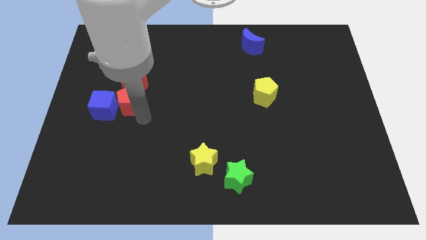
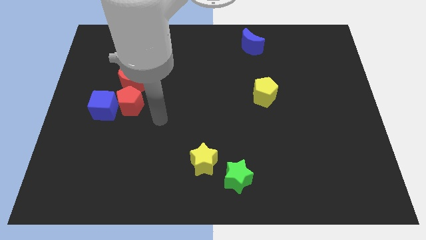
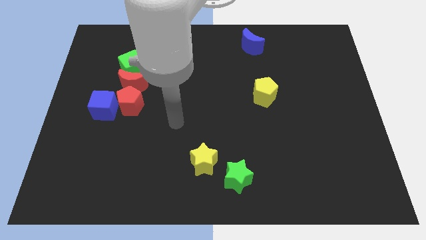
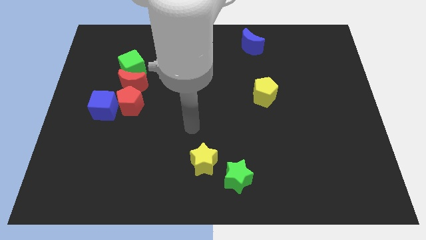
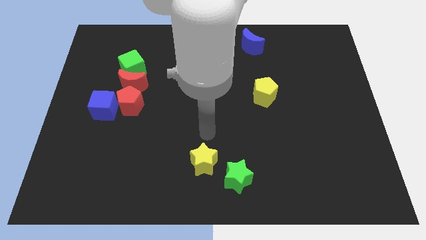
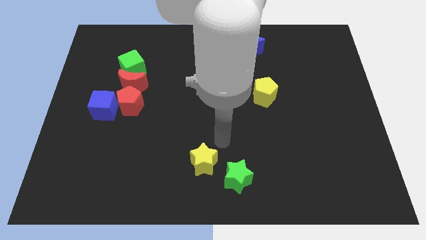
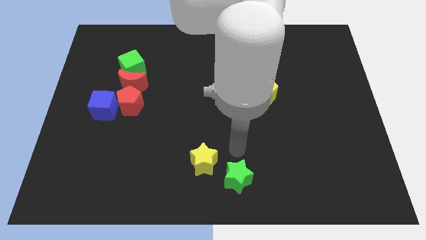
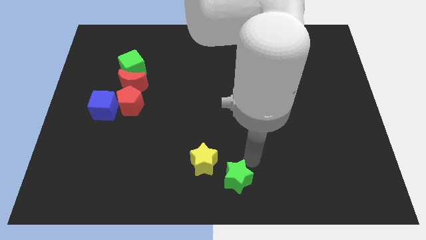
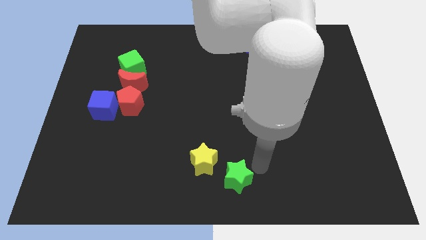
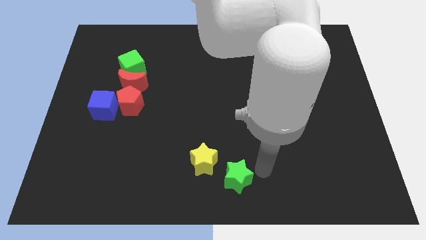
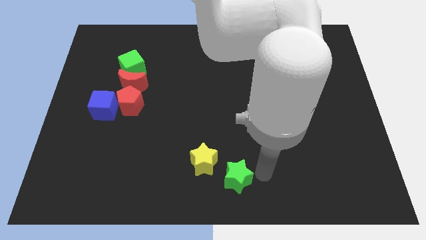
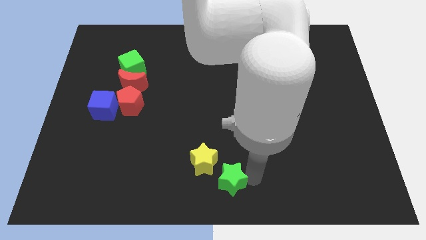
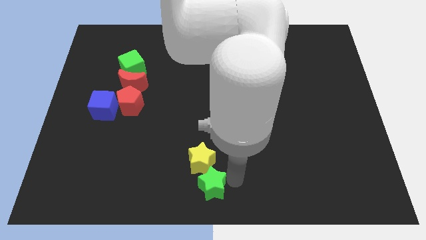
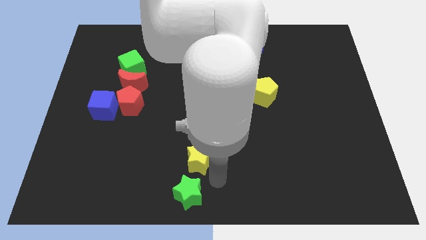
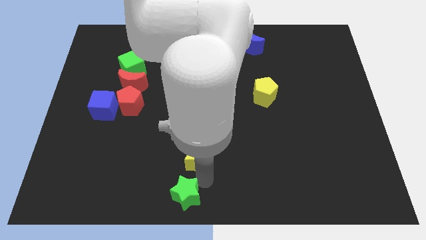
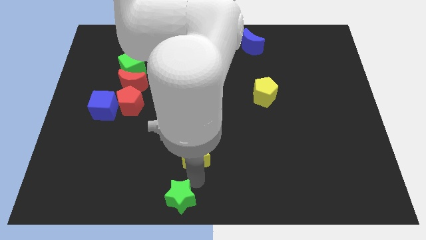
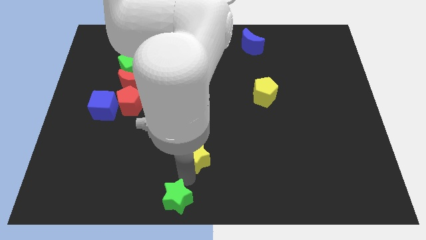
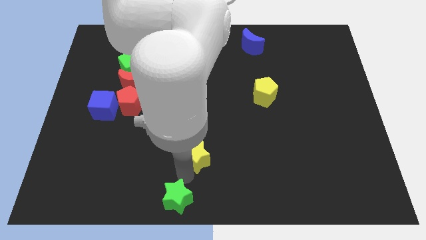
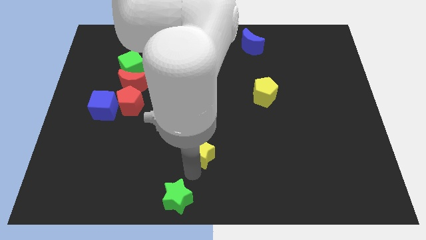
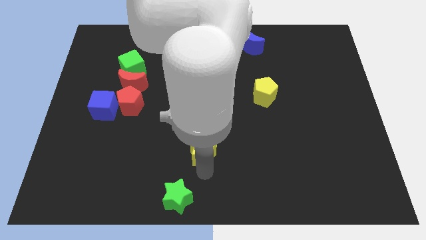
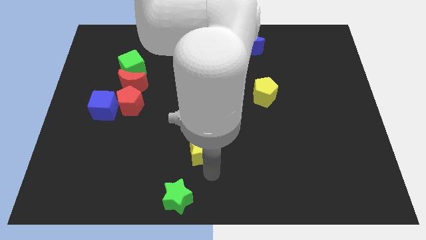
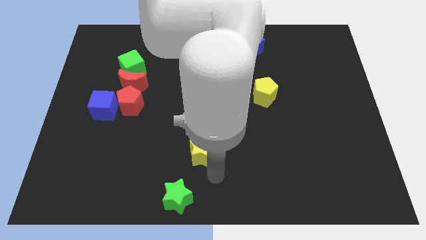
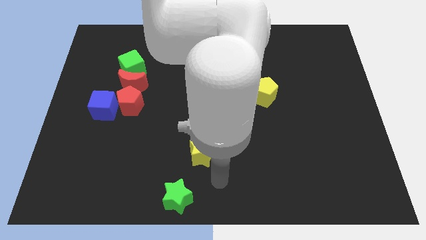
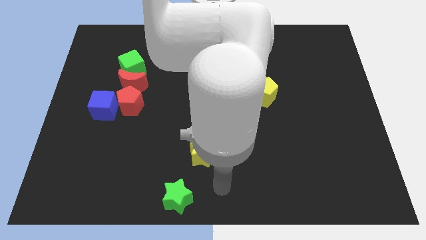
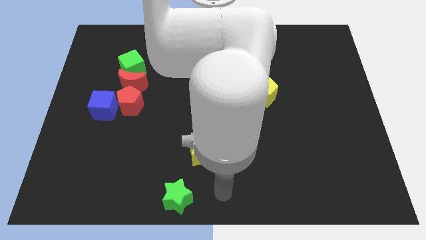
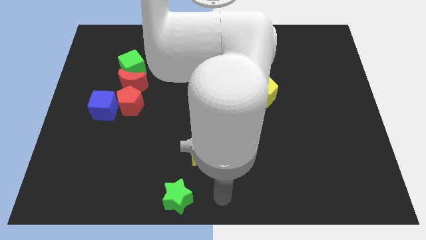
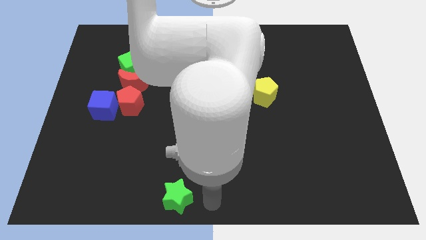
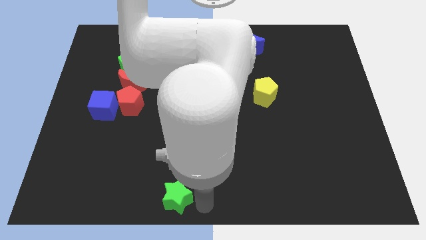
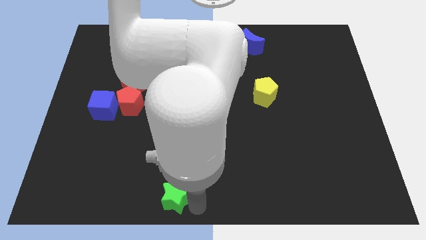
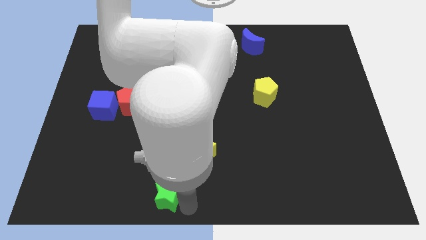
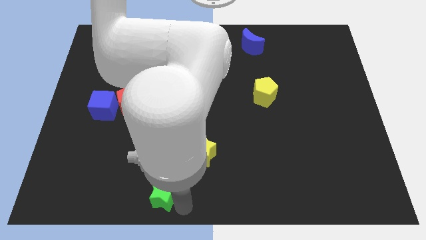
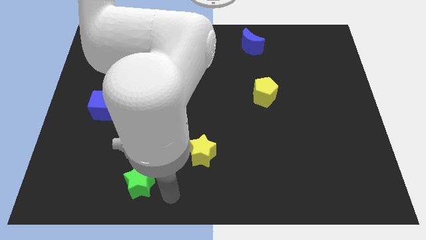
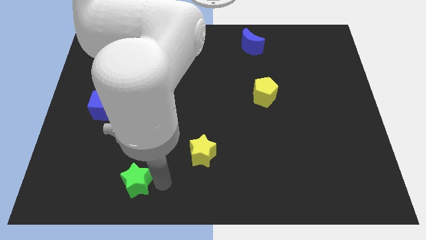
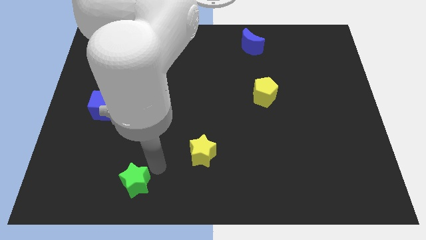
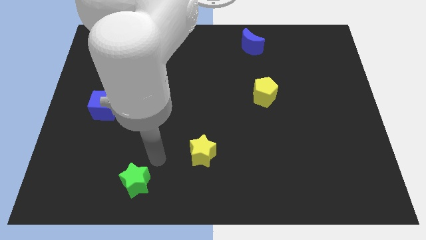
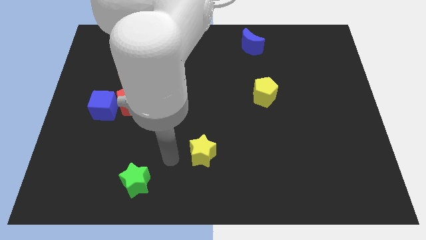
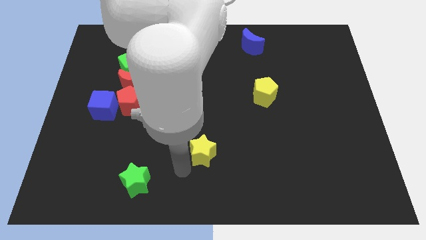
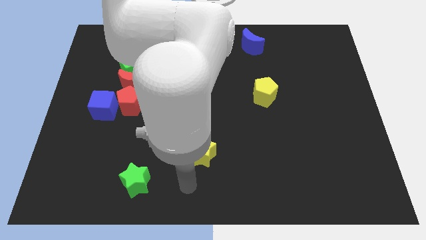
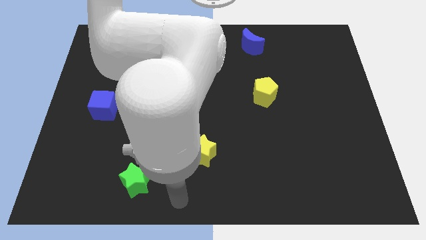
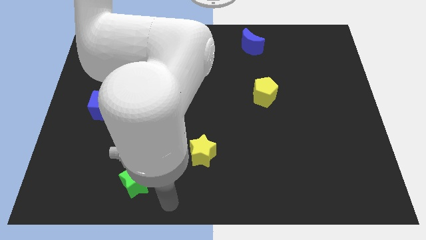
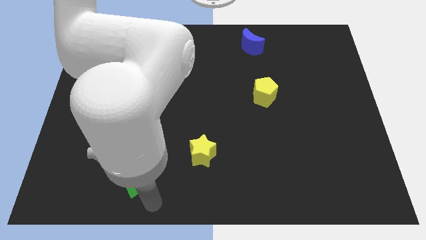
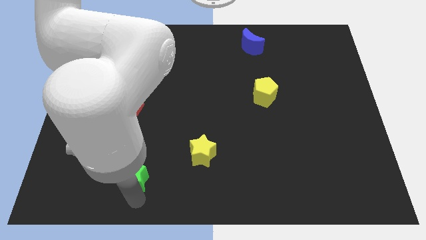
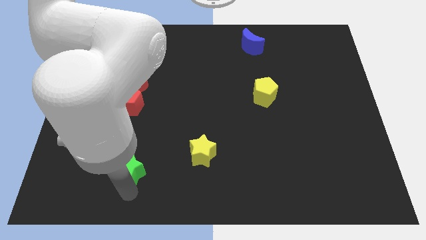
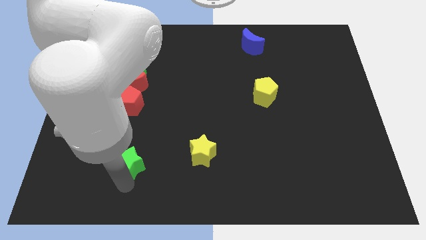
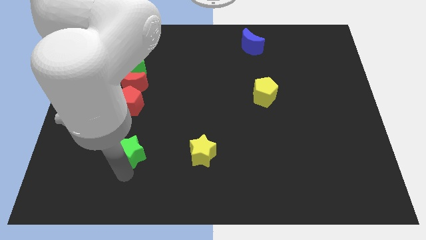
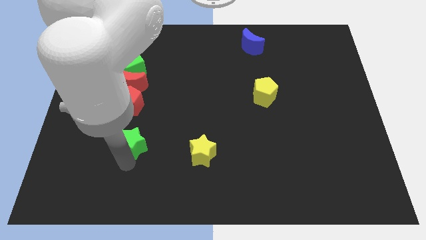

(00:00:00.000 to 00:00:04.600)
place the green star left to the yellow star

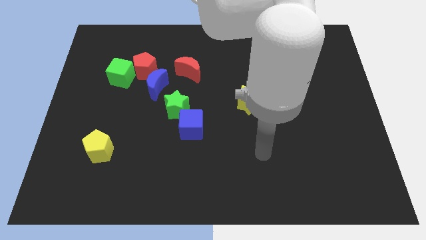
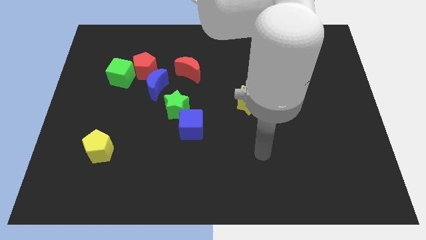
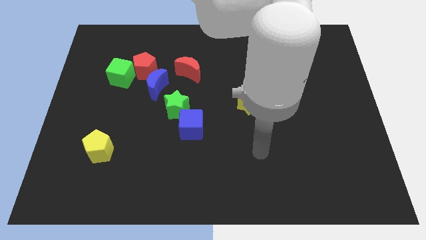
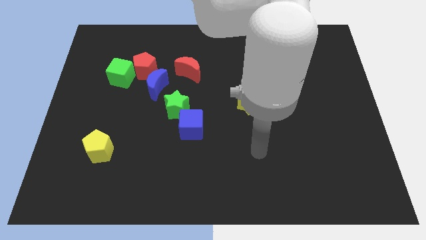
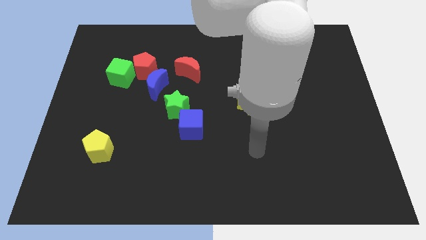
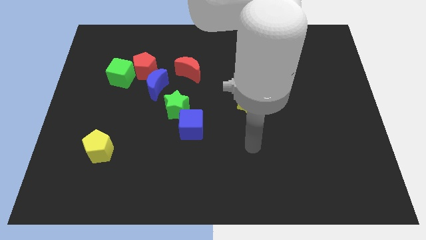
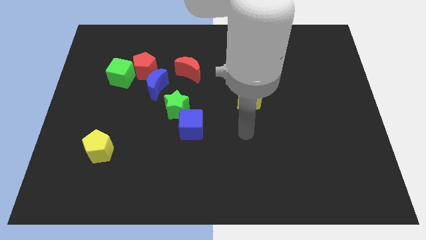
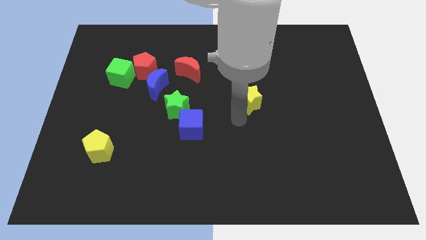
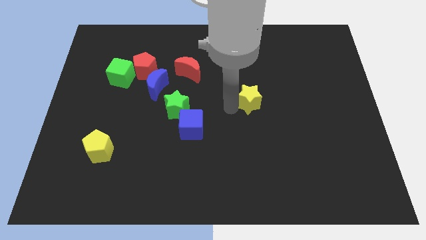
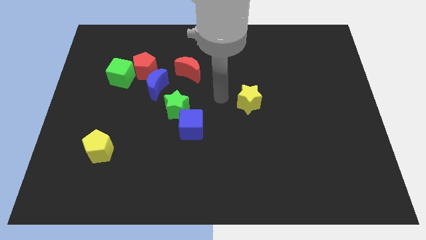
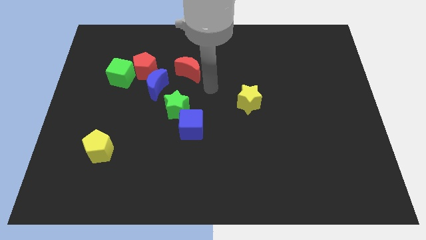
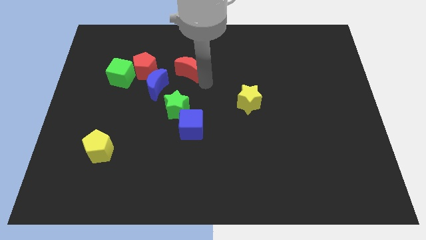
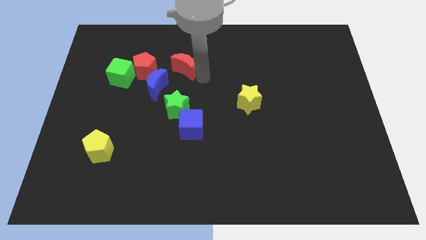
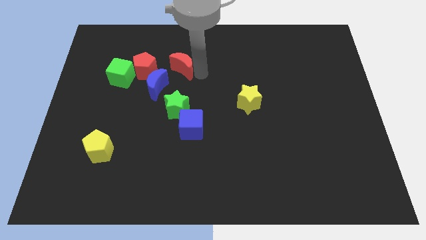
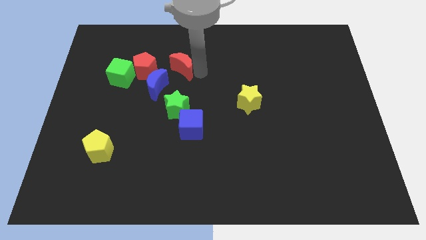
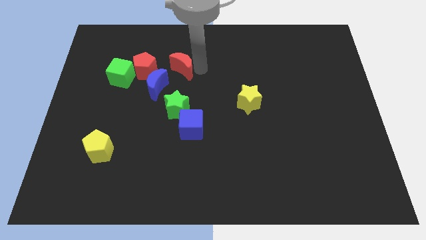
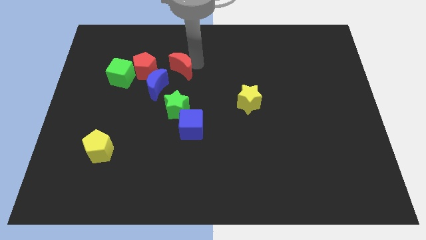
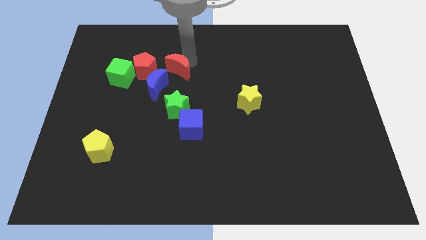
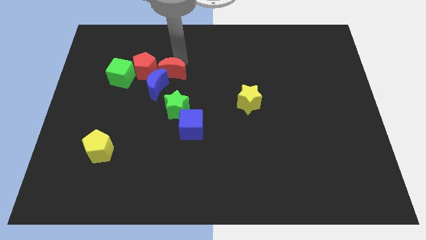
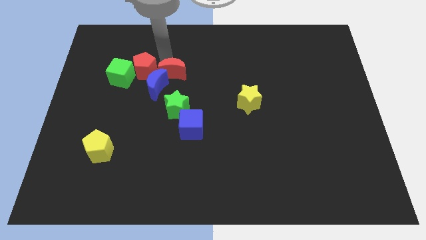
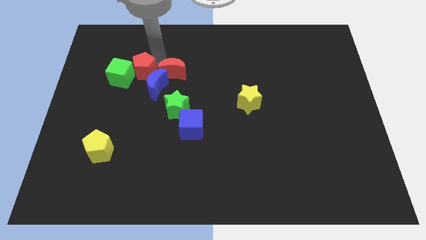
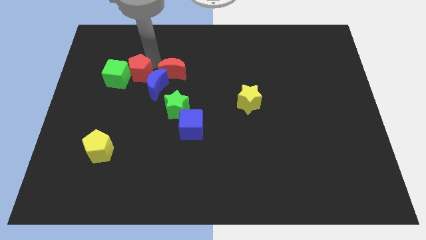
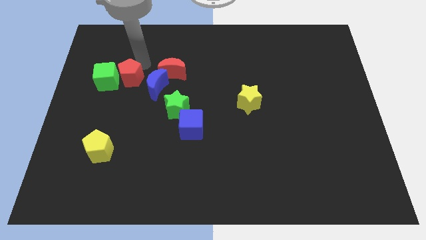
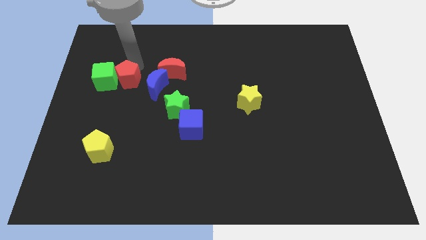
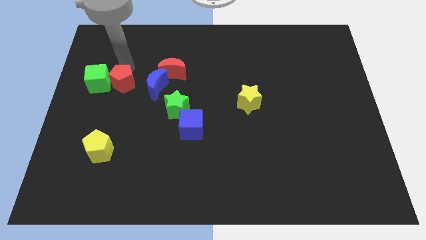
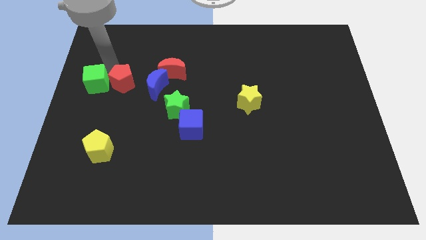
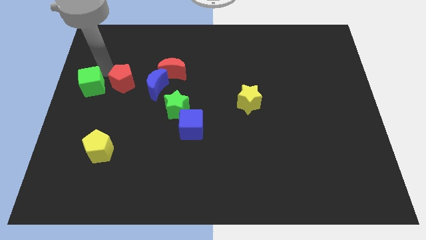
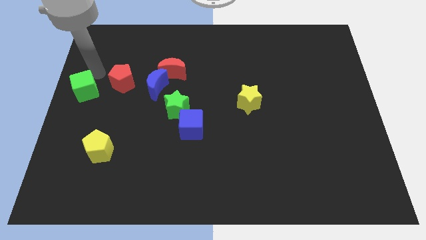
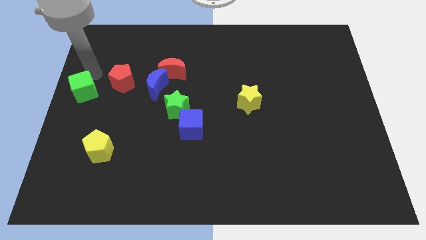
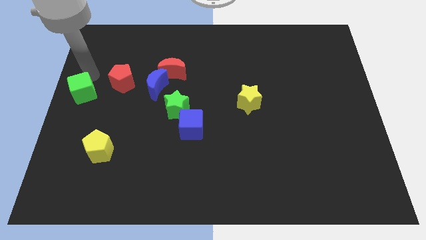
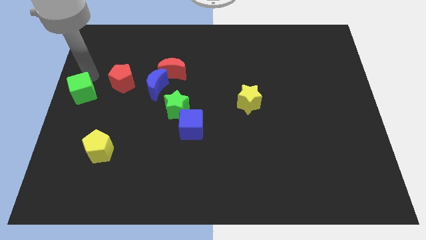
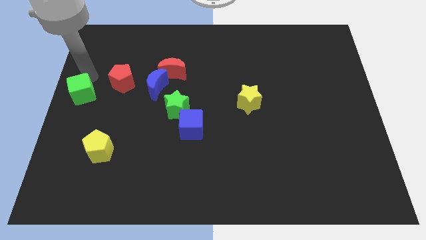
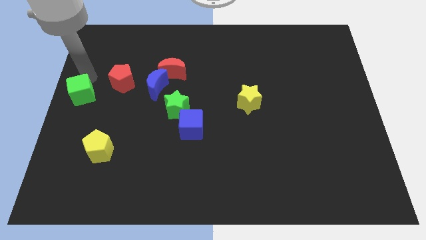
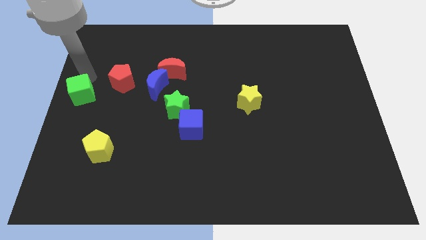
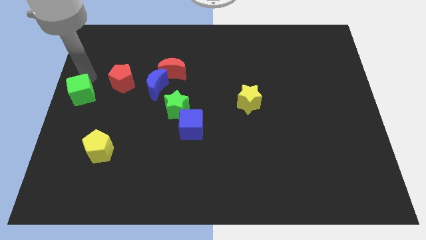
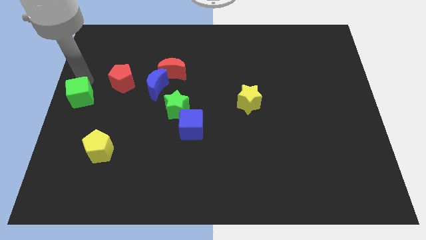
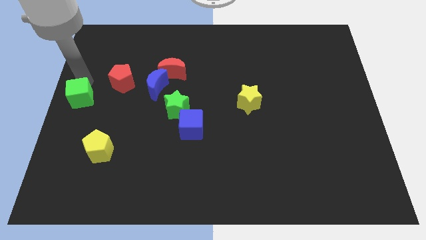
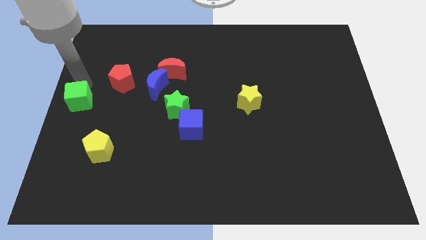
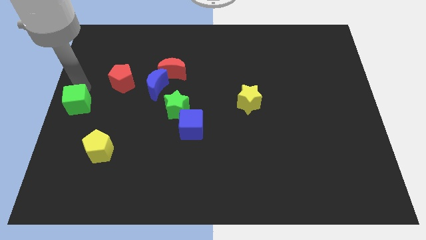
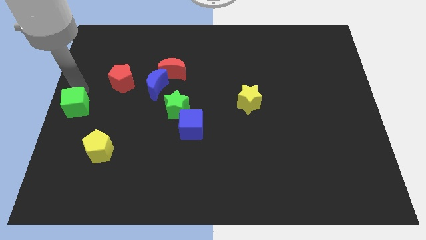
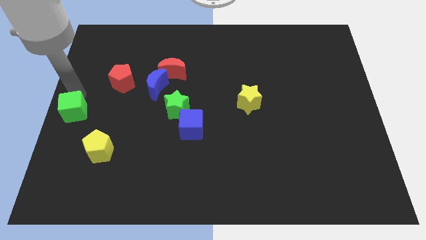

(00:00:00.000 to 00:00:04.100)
place the green cube at the center left of the board

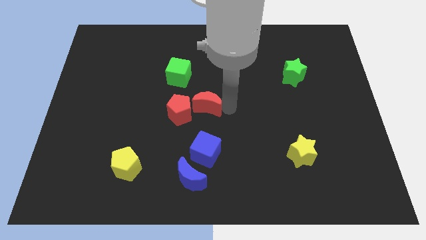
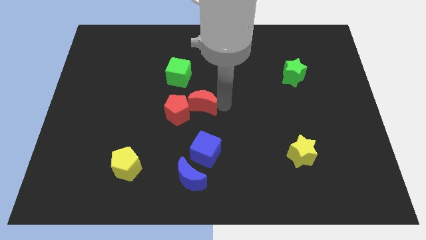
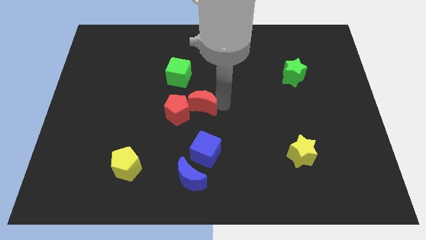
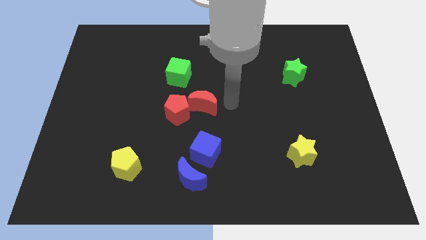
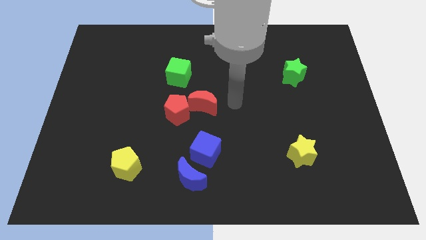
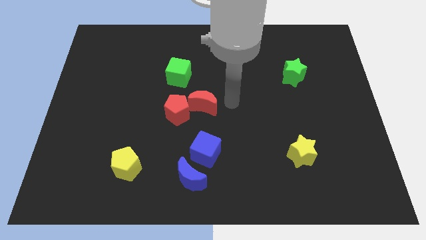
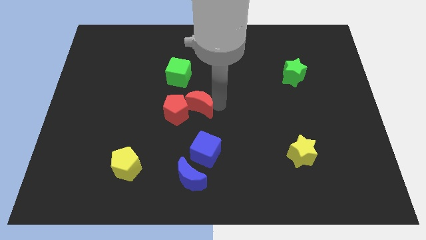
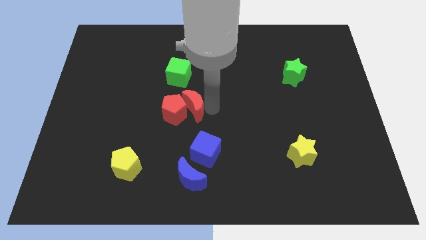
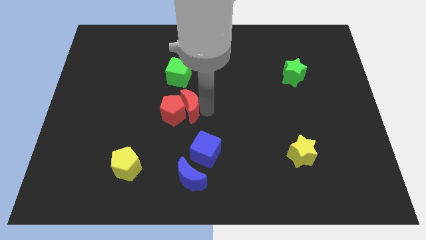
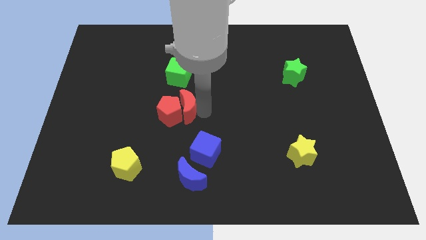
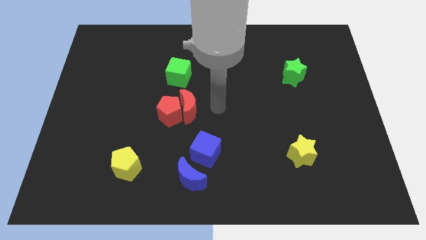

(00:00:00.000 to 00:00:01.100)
group up the red blocks below the green cube
